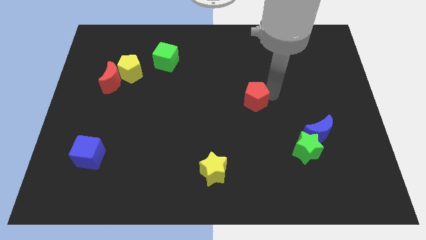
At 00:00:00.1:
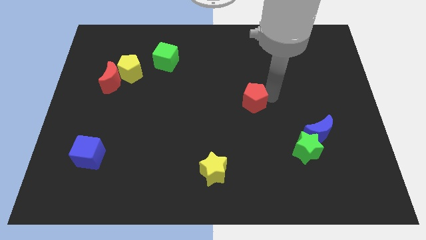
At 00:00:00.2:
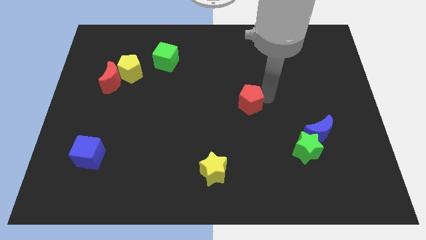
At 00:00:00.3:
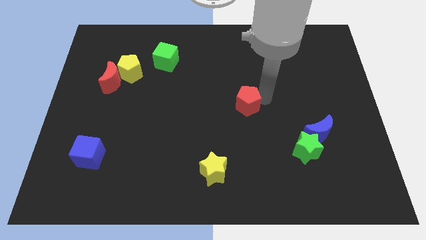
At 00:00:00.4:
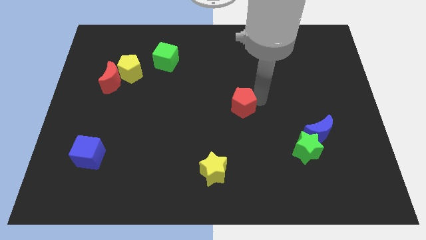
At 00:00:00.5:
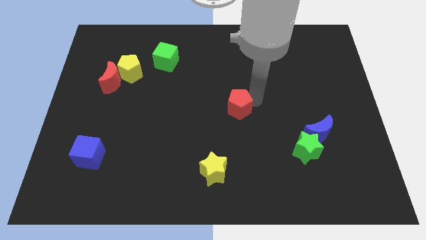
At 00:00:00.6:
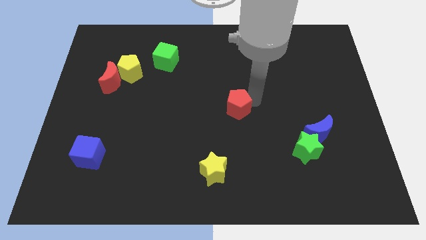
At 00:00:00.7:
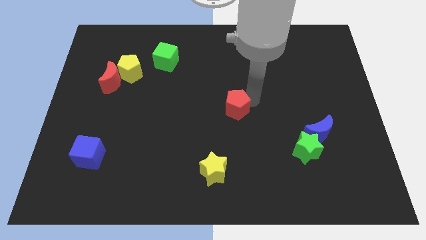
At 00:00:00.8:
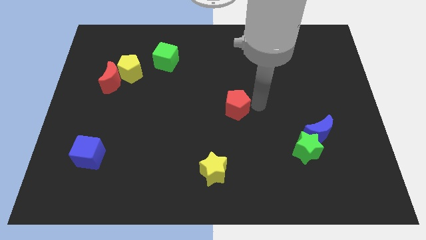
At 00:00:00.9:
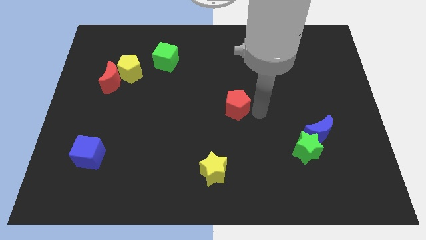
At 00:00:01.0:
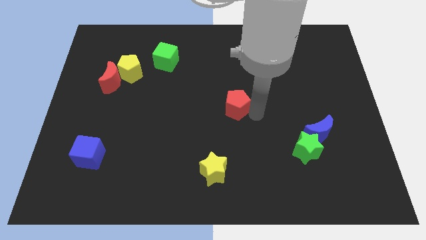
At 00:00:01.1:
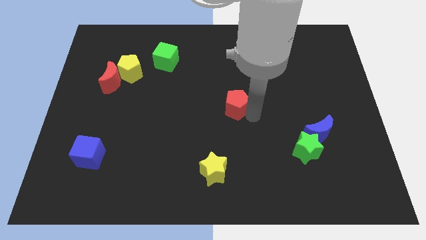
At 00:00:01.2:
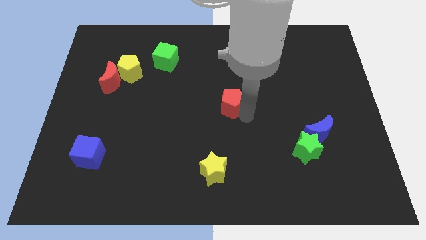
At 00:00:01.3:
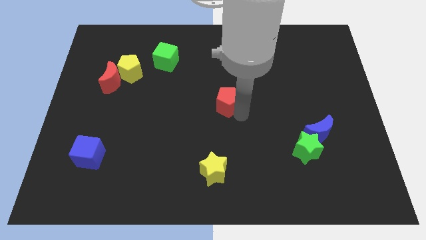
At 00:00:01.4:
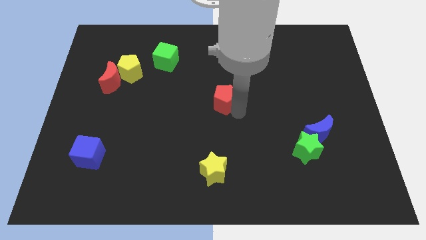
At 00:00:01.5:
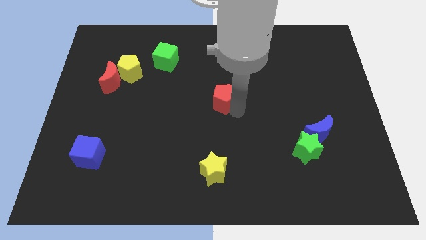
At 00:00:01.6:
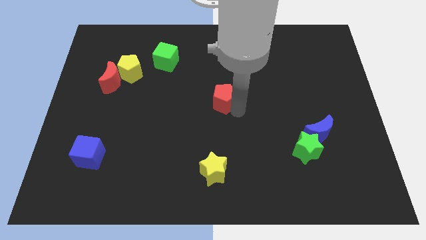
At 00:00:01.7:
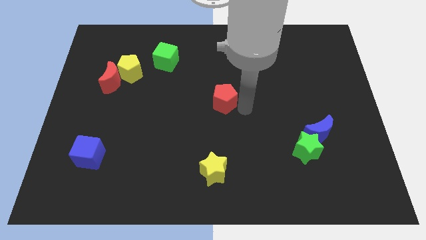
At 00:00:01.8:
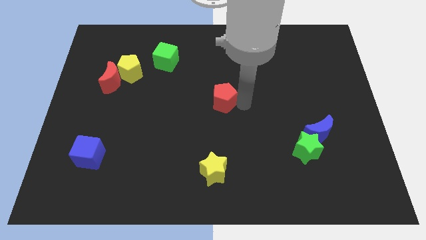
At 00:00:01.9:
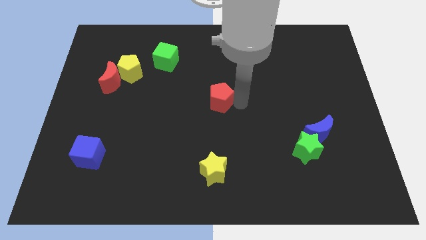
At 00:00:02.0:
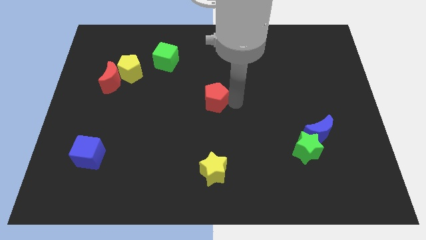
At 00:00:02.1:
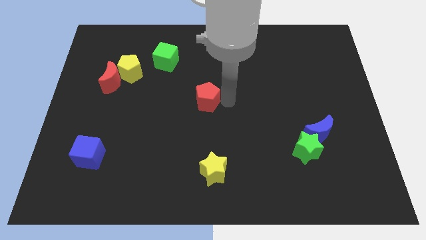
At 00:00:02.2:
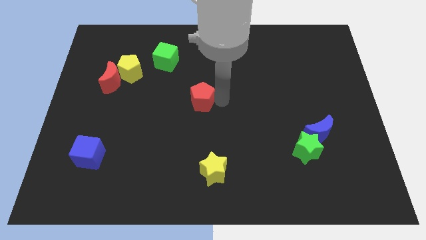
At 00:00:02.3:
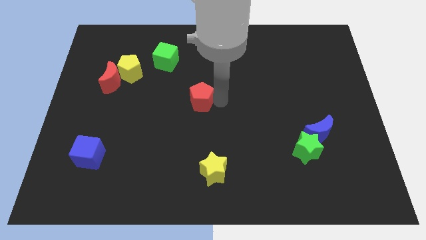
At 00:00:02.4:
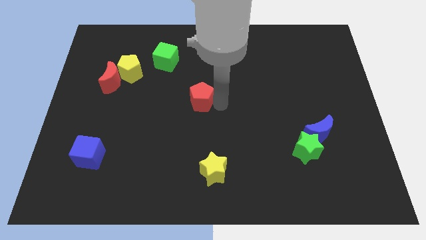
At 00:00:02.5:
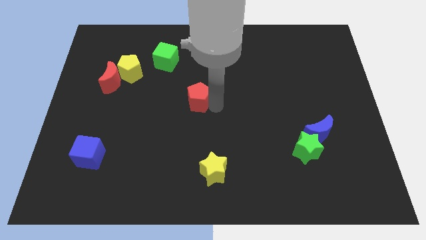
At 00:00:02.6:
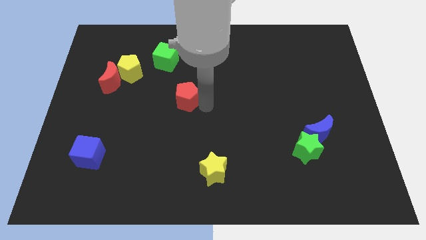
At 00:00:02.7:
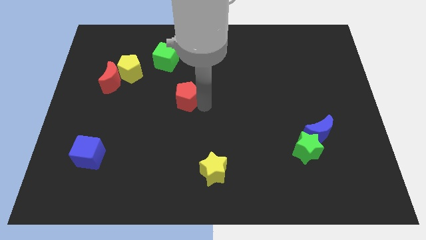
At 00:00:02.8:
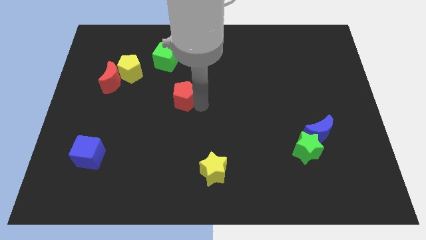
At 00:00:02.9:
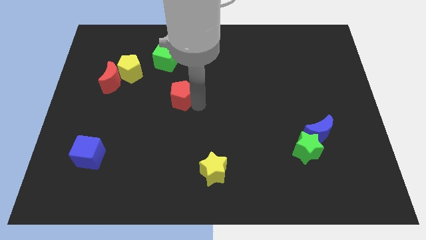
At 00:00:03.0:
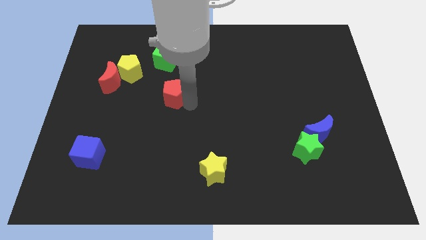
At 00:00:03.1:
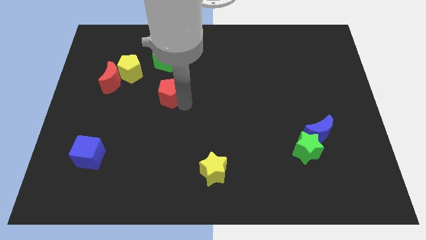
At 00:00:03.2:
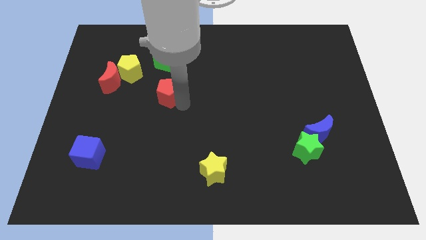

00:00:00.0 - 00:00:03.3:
push the red pentagon to the bottom of the green cube

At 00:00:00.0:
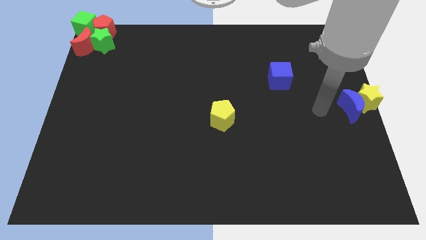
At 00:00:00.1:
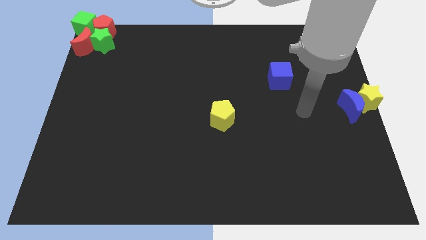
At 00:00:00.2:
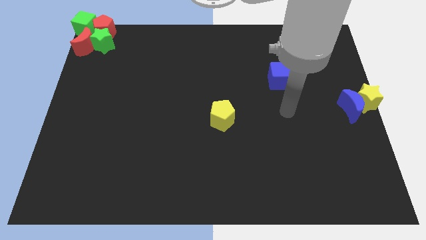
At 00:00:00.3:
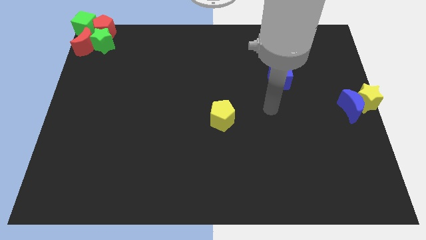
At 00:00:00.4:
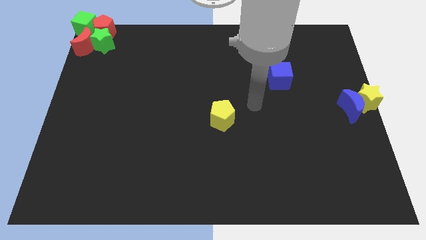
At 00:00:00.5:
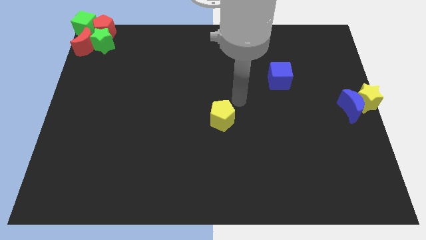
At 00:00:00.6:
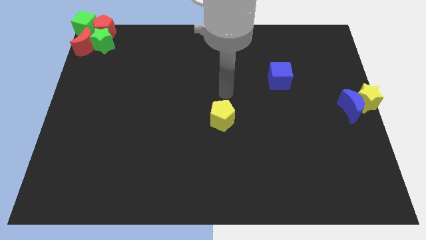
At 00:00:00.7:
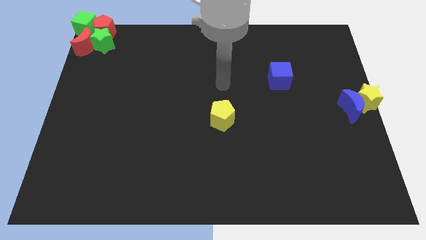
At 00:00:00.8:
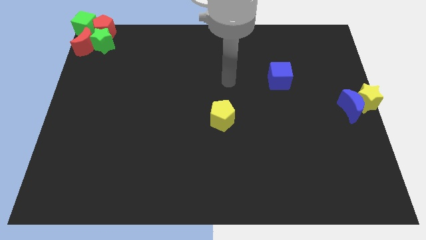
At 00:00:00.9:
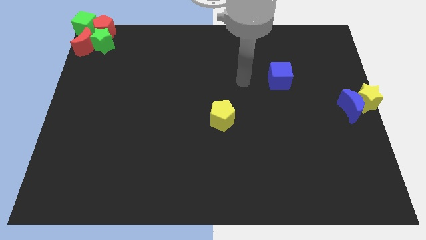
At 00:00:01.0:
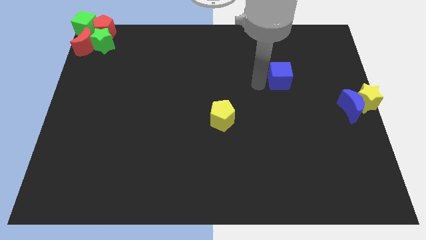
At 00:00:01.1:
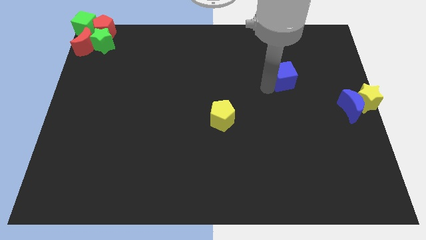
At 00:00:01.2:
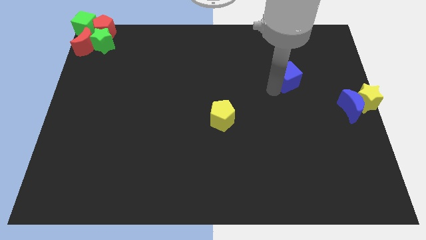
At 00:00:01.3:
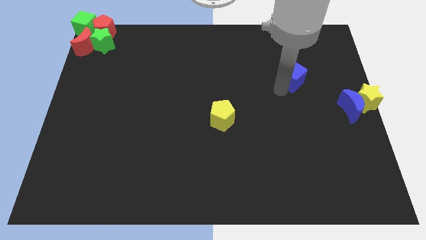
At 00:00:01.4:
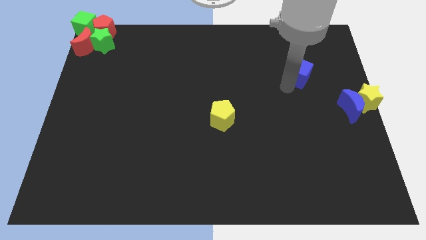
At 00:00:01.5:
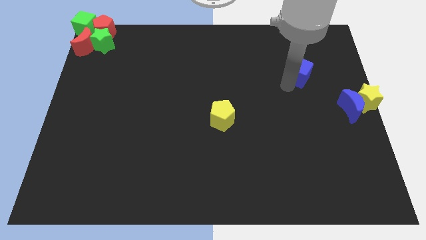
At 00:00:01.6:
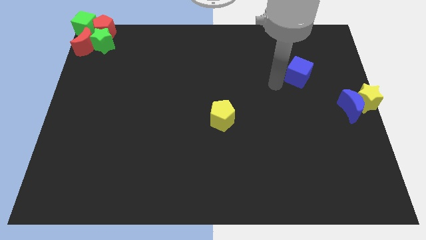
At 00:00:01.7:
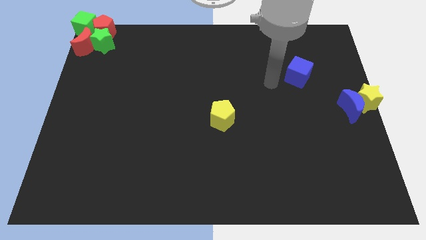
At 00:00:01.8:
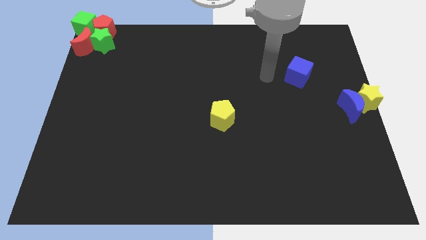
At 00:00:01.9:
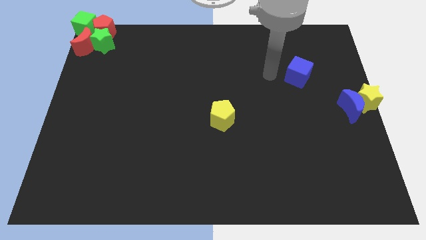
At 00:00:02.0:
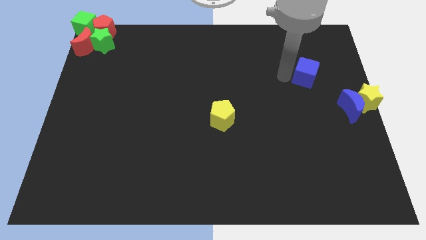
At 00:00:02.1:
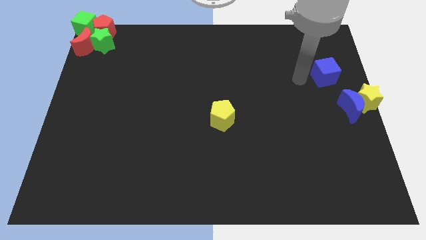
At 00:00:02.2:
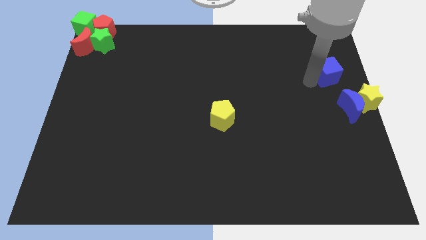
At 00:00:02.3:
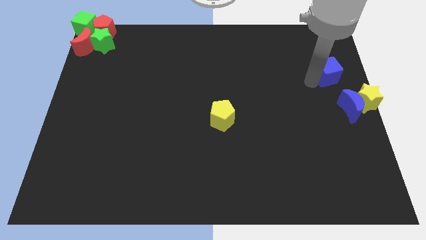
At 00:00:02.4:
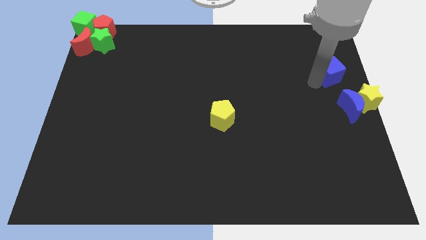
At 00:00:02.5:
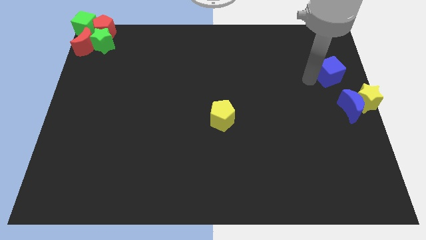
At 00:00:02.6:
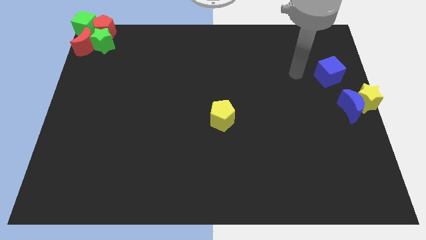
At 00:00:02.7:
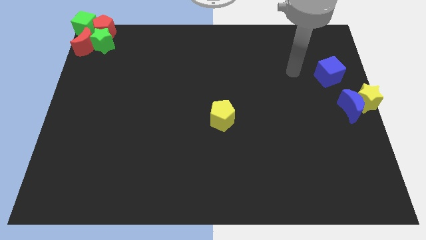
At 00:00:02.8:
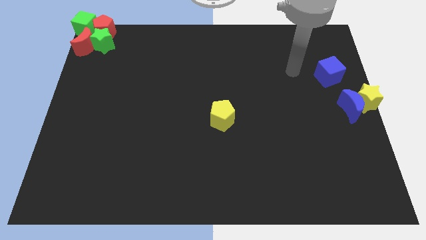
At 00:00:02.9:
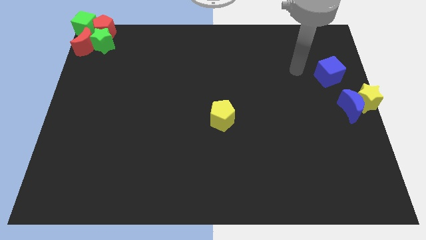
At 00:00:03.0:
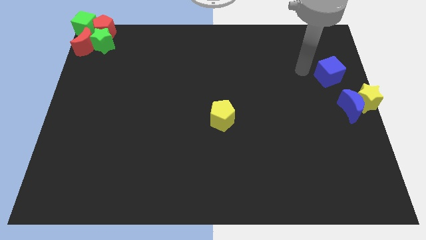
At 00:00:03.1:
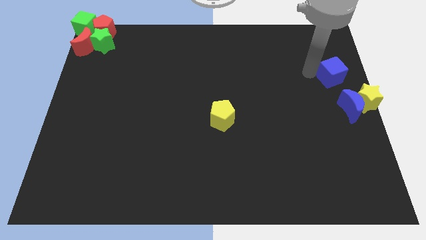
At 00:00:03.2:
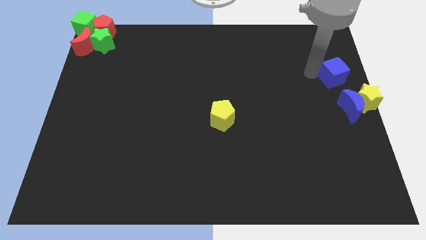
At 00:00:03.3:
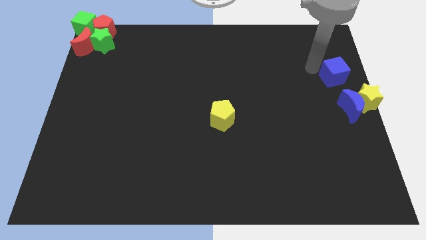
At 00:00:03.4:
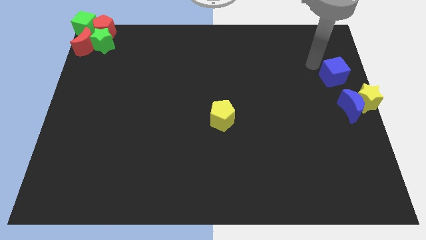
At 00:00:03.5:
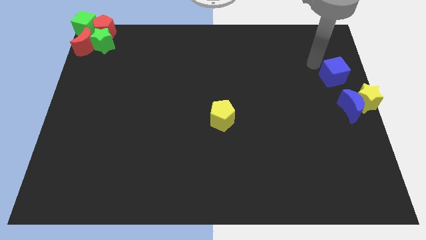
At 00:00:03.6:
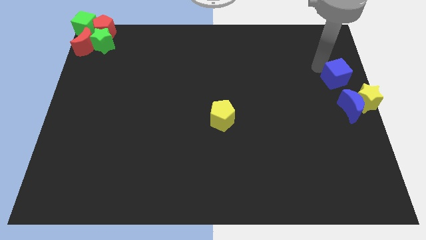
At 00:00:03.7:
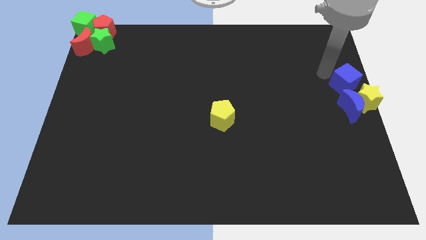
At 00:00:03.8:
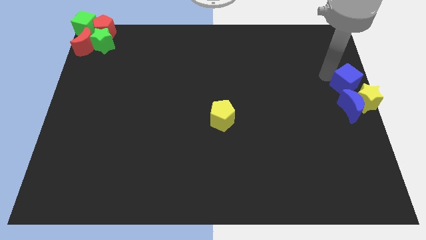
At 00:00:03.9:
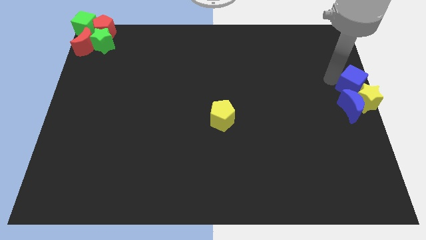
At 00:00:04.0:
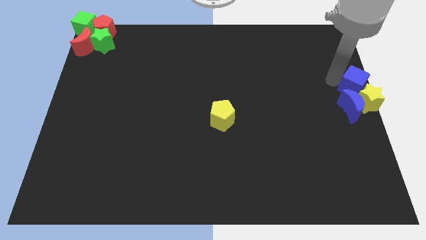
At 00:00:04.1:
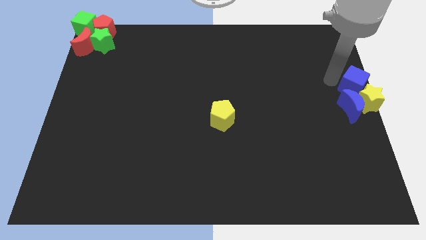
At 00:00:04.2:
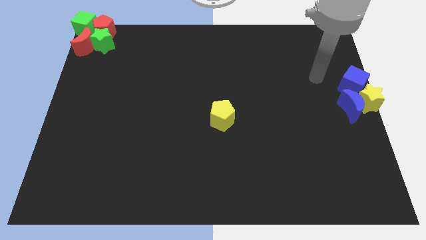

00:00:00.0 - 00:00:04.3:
push the blue cube at the top of the blue moon and yellow star

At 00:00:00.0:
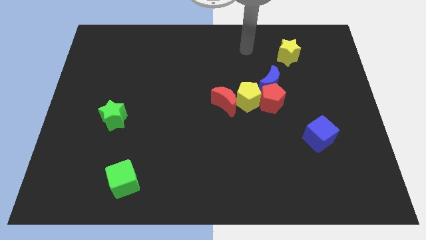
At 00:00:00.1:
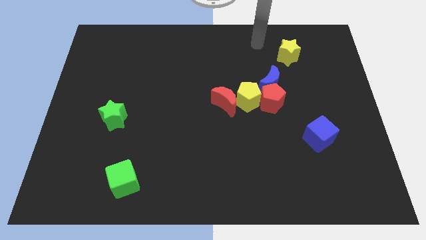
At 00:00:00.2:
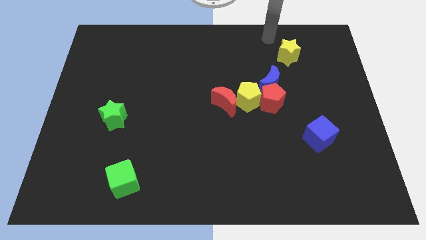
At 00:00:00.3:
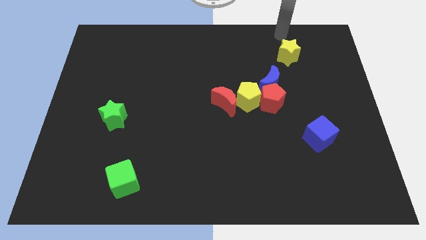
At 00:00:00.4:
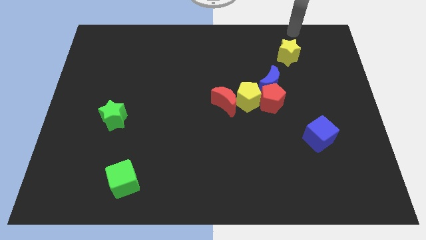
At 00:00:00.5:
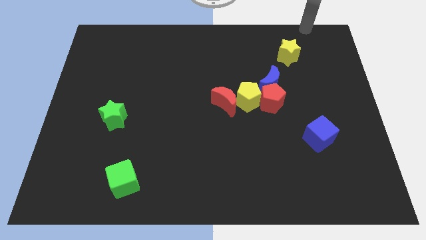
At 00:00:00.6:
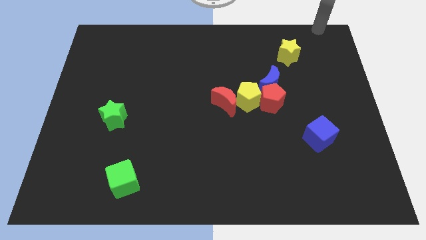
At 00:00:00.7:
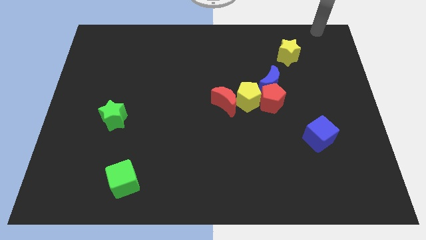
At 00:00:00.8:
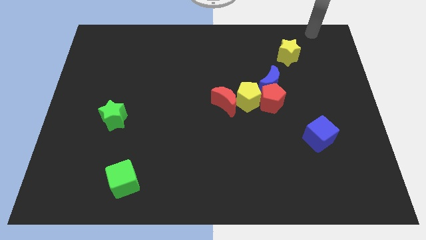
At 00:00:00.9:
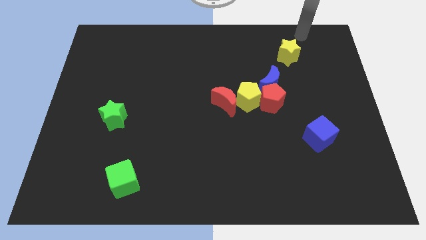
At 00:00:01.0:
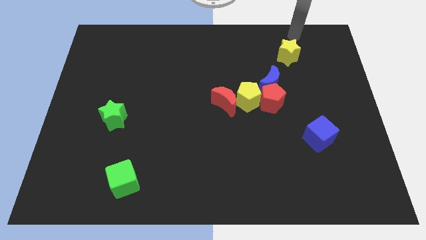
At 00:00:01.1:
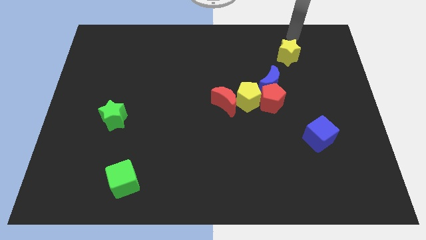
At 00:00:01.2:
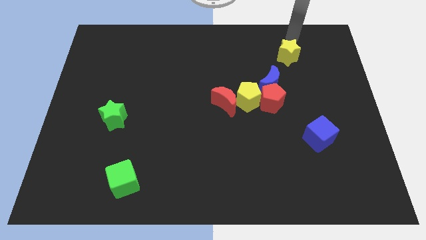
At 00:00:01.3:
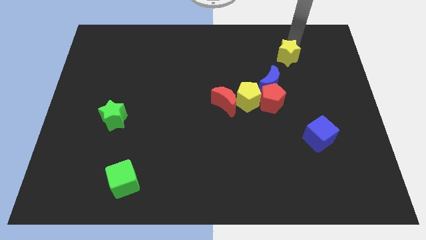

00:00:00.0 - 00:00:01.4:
place the arm above the yellow star
